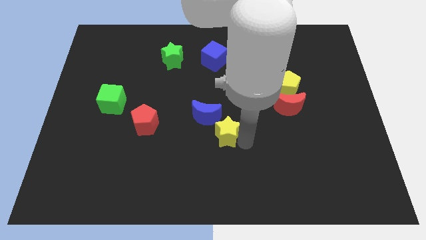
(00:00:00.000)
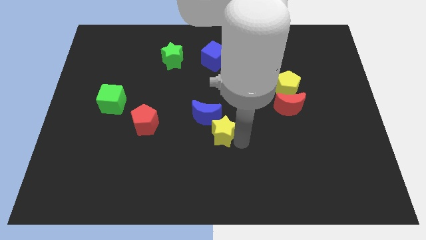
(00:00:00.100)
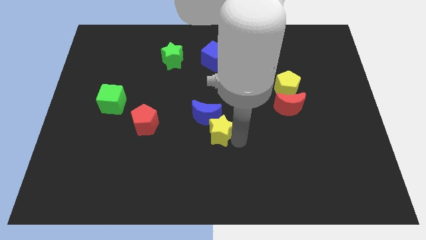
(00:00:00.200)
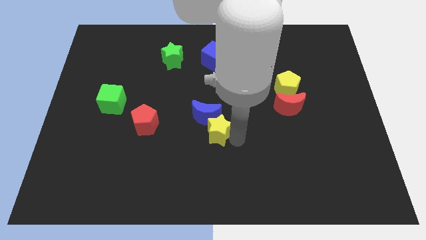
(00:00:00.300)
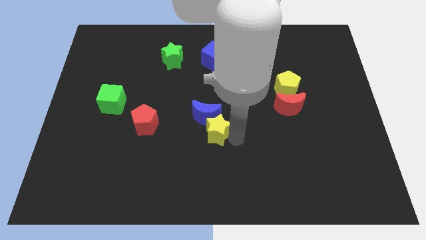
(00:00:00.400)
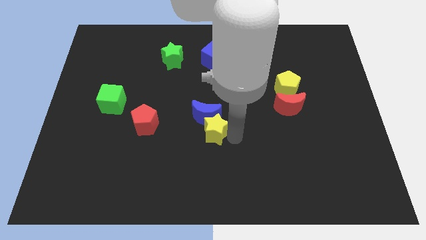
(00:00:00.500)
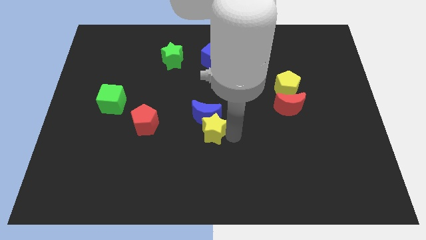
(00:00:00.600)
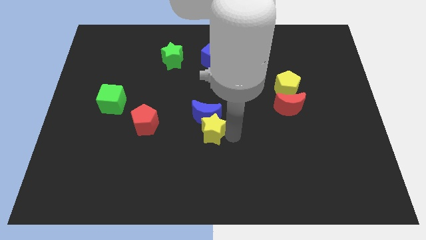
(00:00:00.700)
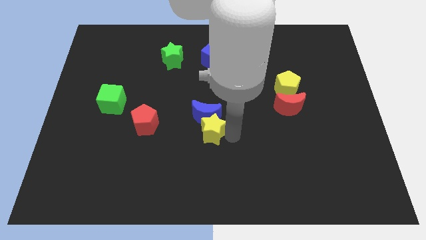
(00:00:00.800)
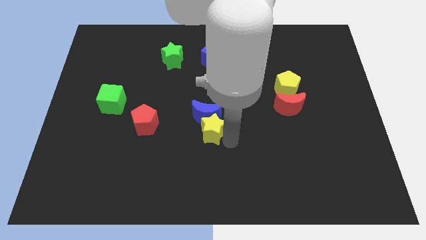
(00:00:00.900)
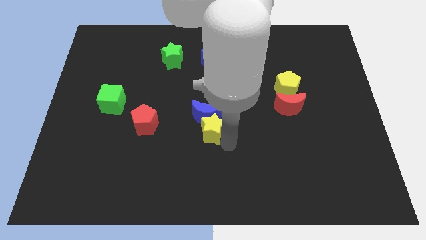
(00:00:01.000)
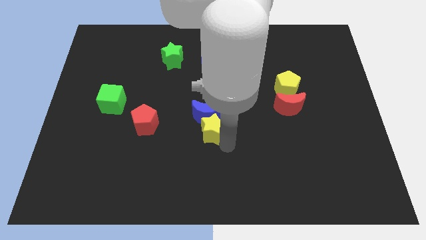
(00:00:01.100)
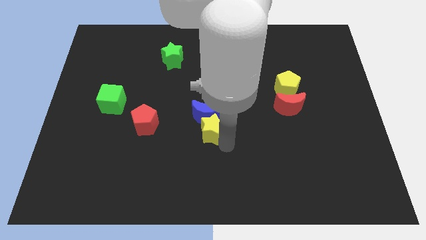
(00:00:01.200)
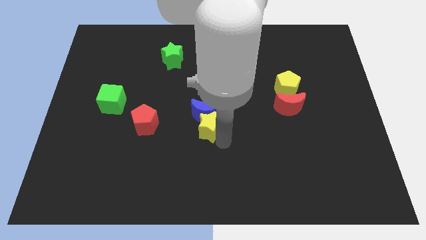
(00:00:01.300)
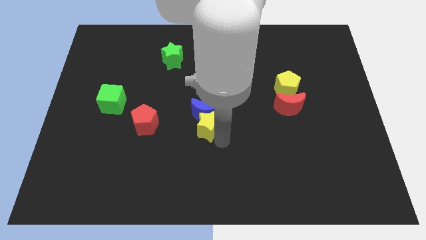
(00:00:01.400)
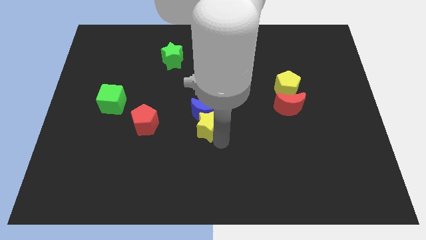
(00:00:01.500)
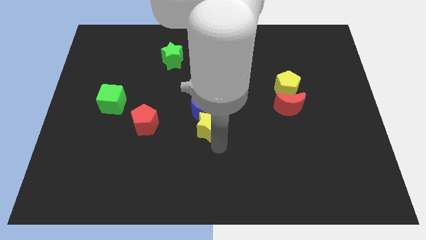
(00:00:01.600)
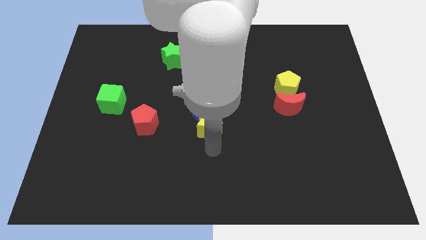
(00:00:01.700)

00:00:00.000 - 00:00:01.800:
move the yellow star into the blue moon

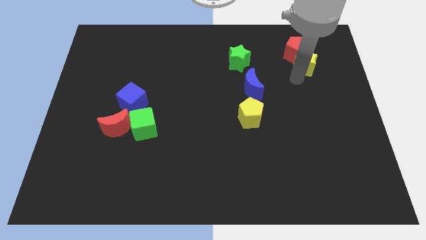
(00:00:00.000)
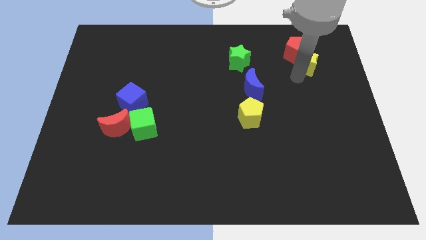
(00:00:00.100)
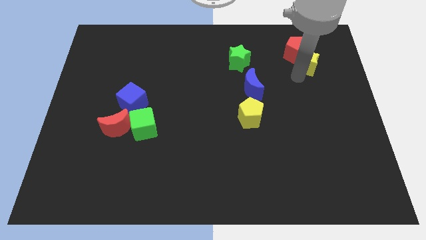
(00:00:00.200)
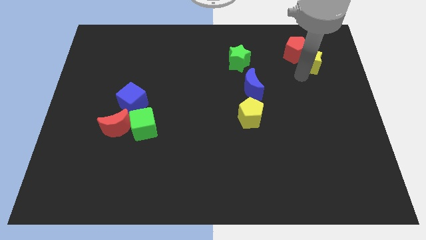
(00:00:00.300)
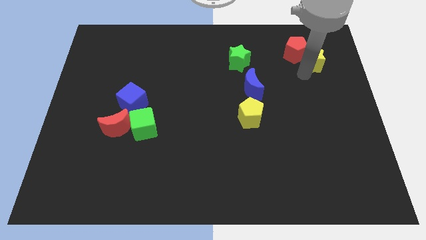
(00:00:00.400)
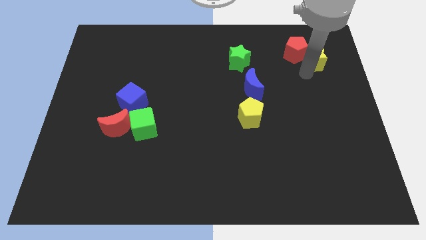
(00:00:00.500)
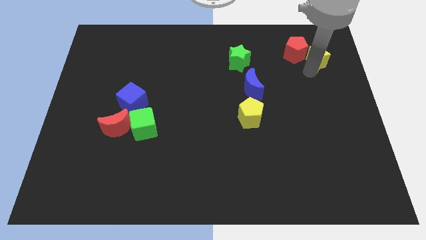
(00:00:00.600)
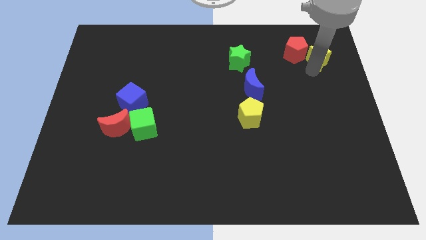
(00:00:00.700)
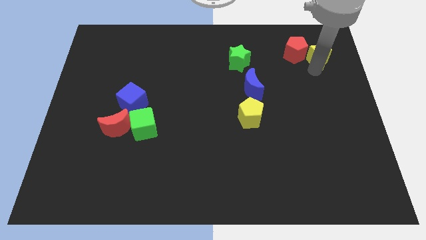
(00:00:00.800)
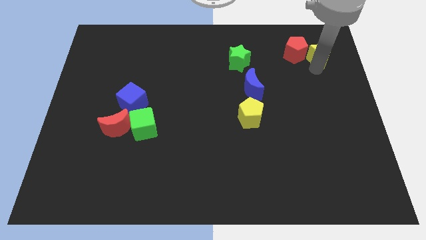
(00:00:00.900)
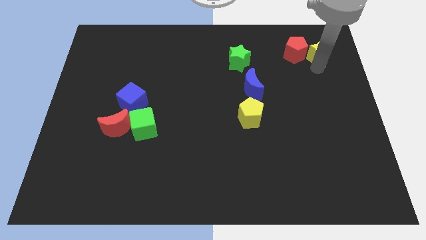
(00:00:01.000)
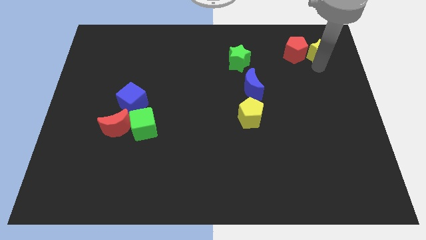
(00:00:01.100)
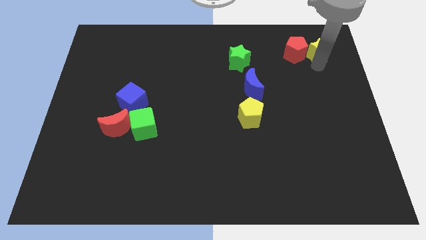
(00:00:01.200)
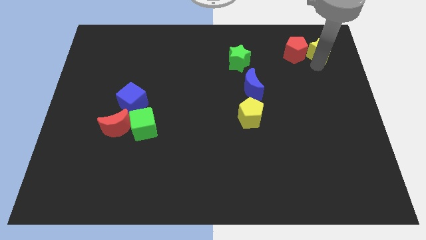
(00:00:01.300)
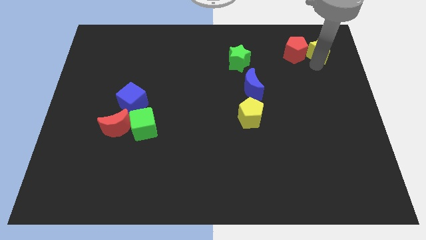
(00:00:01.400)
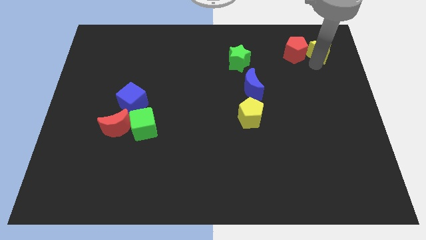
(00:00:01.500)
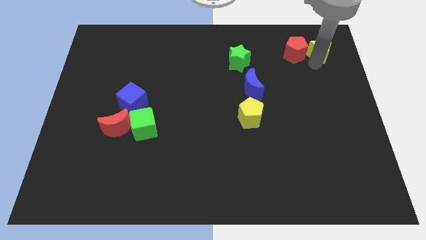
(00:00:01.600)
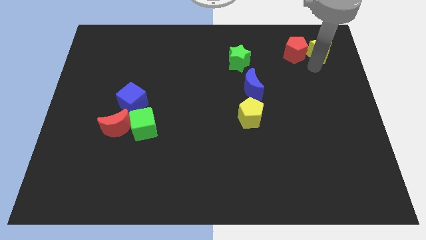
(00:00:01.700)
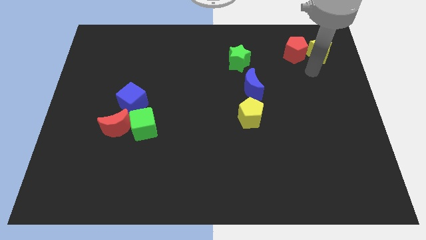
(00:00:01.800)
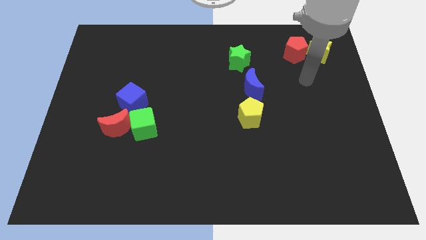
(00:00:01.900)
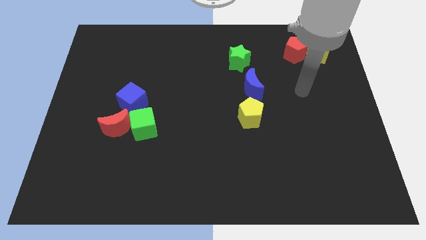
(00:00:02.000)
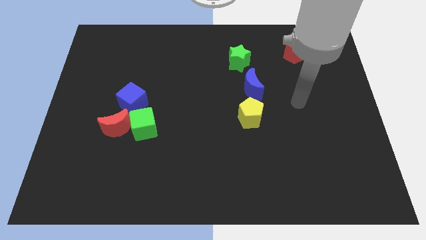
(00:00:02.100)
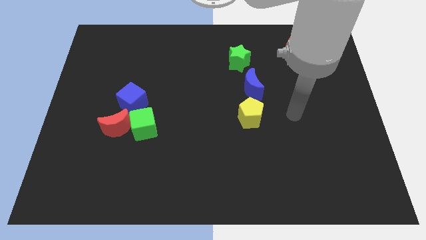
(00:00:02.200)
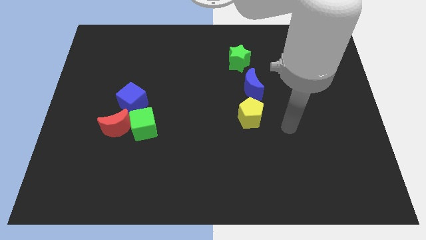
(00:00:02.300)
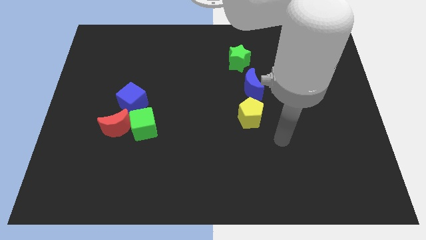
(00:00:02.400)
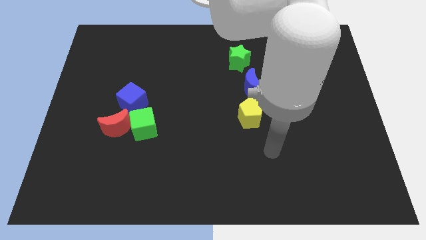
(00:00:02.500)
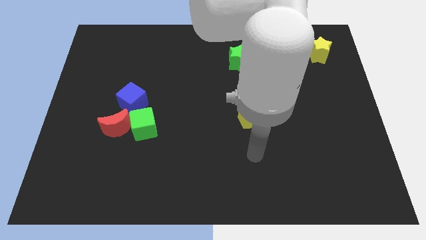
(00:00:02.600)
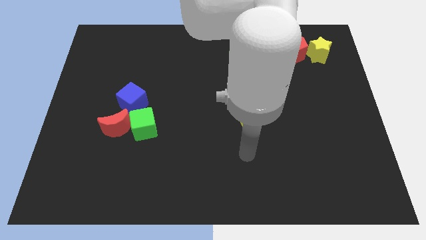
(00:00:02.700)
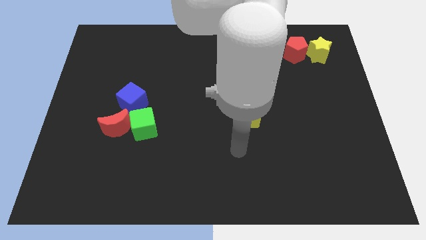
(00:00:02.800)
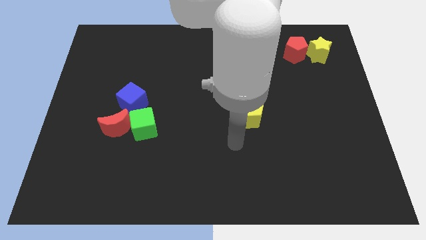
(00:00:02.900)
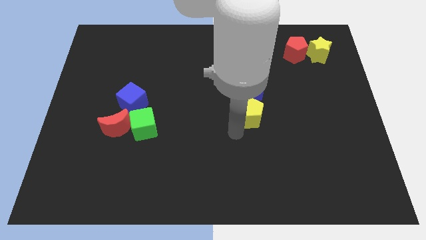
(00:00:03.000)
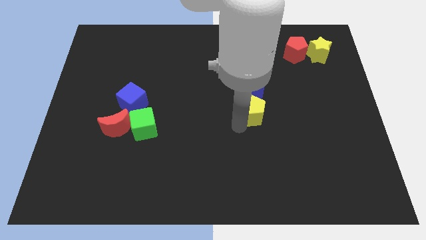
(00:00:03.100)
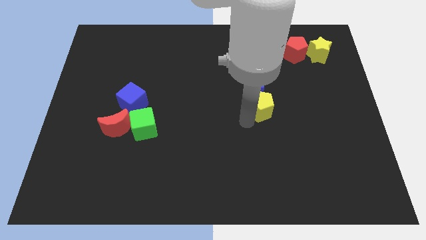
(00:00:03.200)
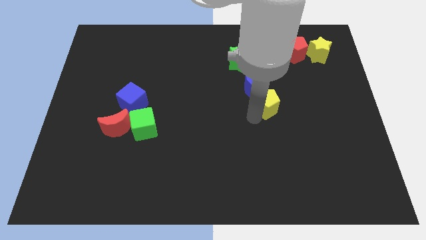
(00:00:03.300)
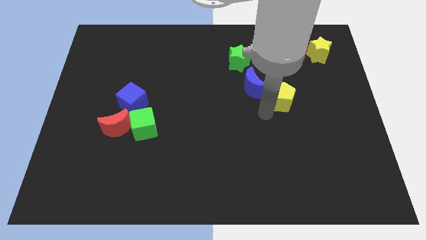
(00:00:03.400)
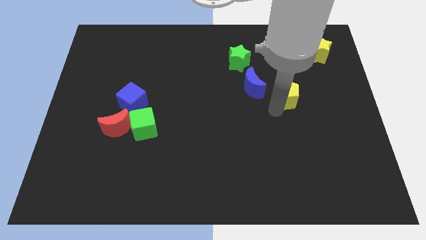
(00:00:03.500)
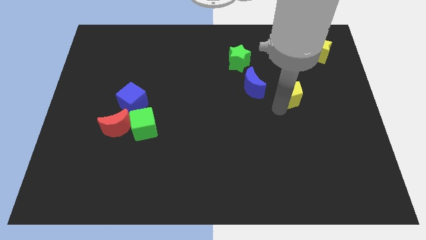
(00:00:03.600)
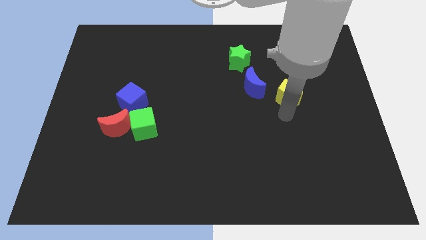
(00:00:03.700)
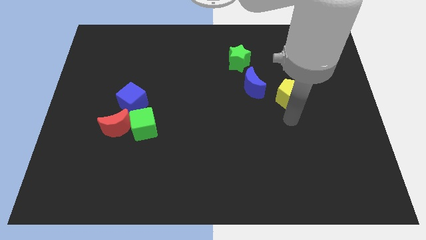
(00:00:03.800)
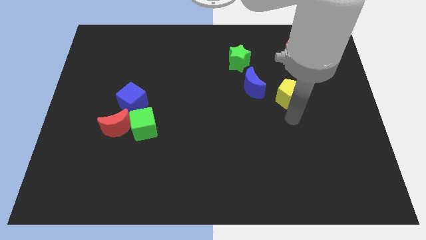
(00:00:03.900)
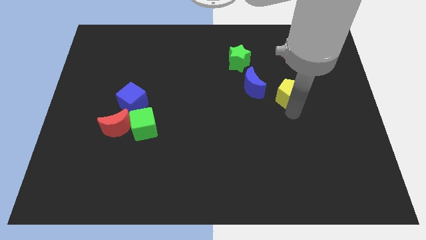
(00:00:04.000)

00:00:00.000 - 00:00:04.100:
push yellow pentagon towards yellow star

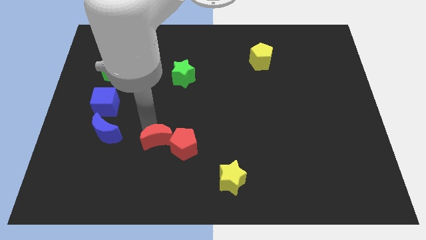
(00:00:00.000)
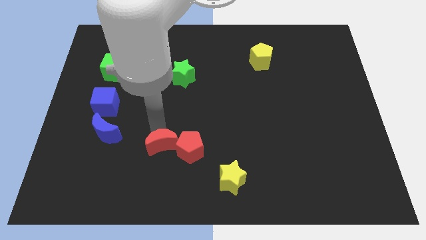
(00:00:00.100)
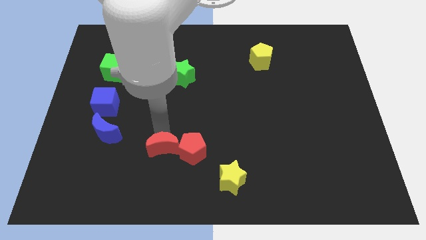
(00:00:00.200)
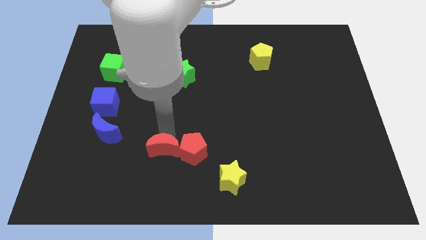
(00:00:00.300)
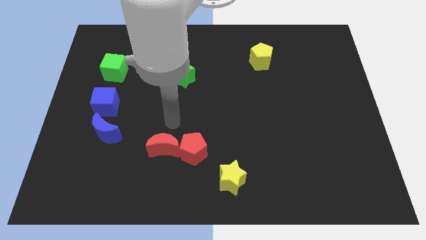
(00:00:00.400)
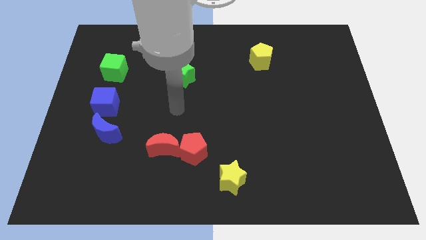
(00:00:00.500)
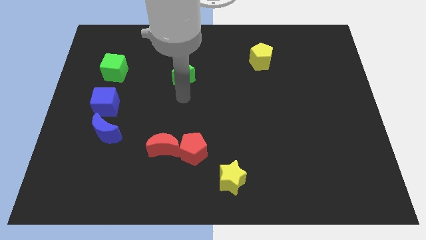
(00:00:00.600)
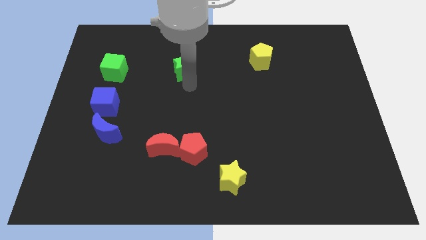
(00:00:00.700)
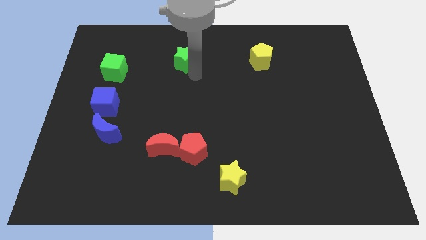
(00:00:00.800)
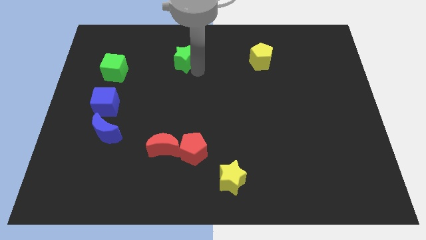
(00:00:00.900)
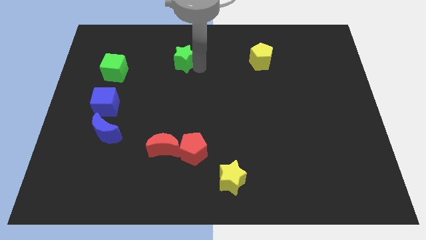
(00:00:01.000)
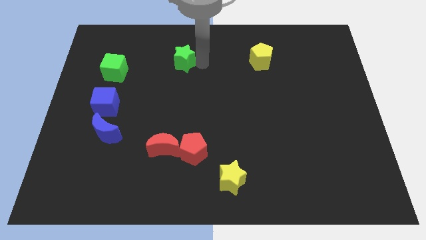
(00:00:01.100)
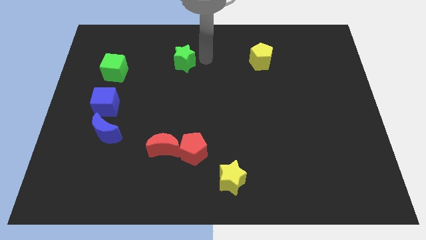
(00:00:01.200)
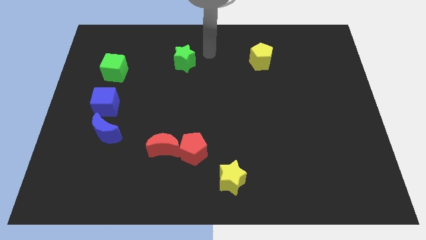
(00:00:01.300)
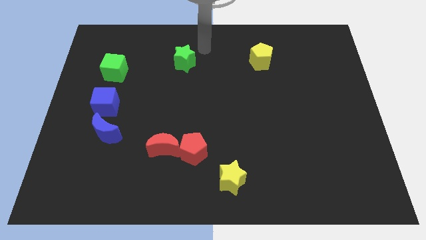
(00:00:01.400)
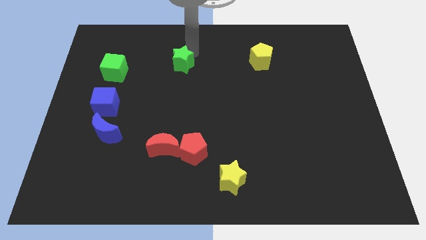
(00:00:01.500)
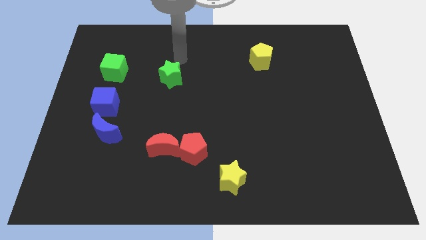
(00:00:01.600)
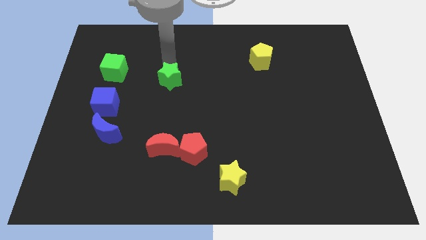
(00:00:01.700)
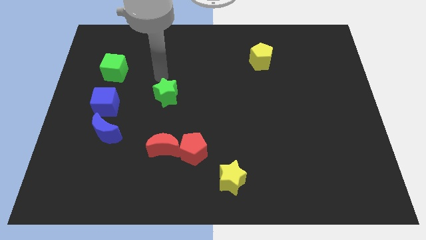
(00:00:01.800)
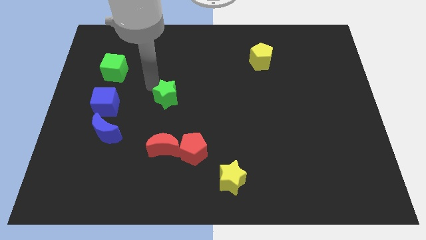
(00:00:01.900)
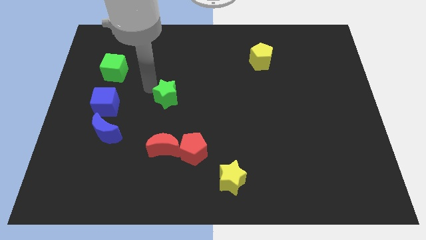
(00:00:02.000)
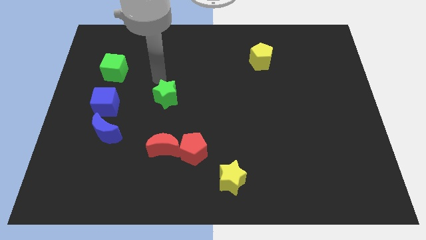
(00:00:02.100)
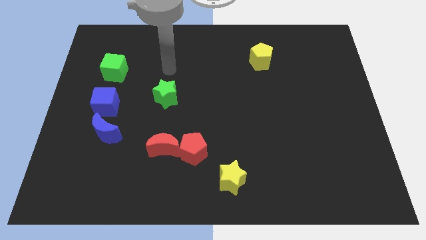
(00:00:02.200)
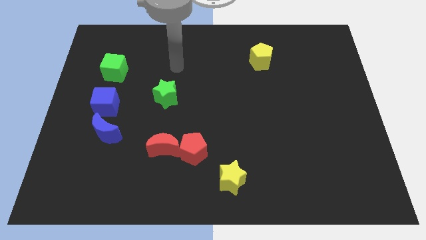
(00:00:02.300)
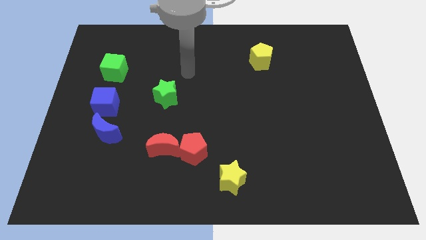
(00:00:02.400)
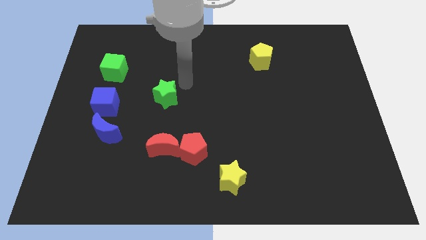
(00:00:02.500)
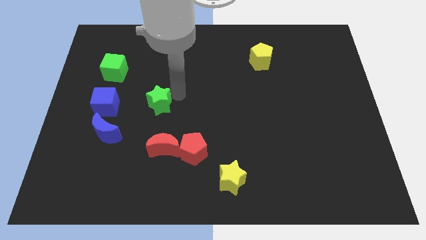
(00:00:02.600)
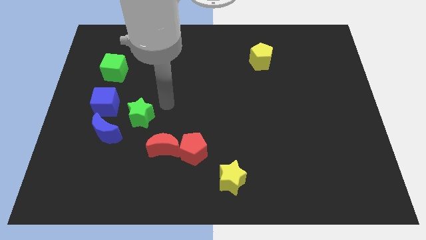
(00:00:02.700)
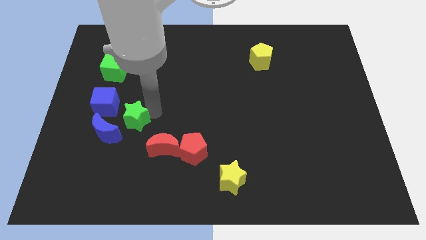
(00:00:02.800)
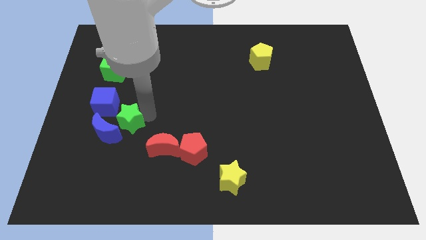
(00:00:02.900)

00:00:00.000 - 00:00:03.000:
slide the green star towards the blue moon
